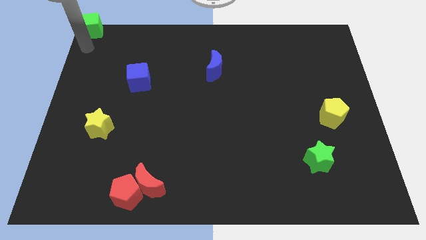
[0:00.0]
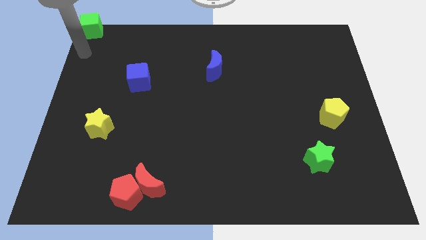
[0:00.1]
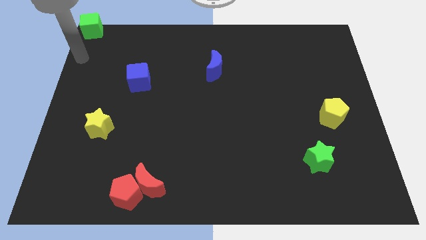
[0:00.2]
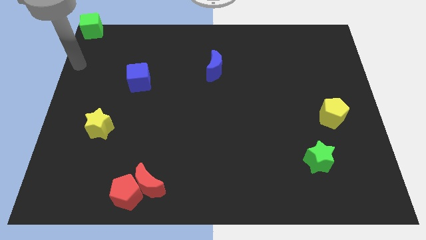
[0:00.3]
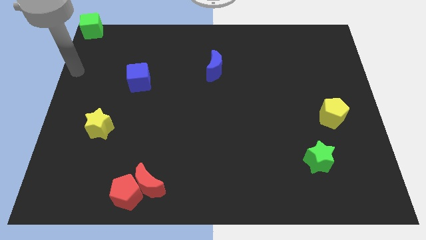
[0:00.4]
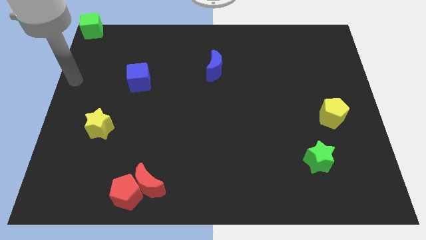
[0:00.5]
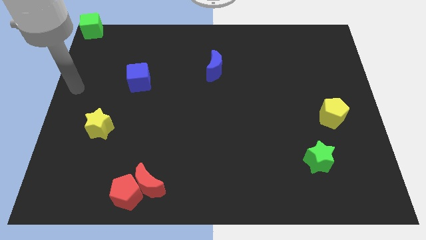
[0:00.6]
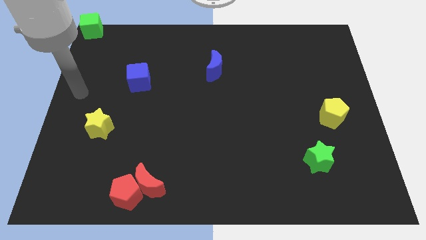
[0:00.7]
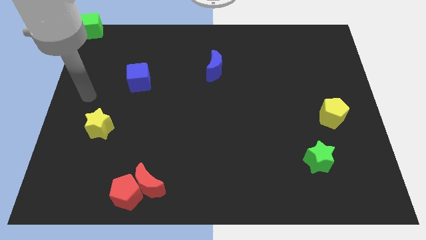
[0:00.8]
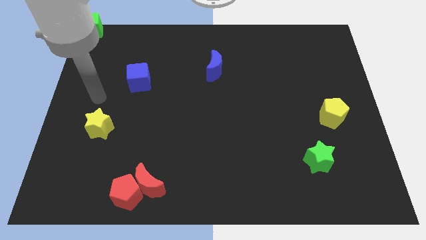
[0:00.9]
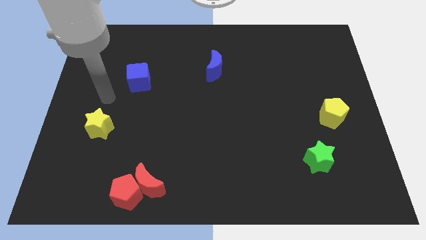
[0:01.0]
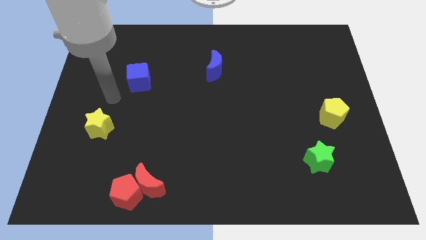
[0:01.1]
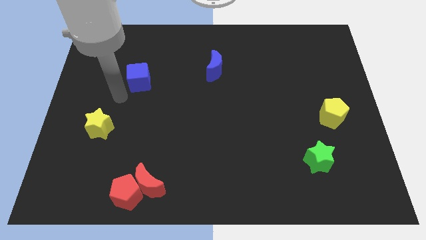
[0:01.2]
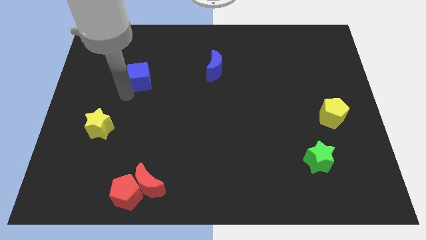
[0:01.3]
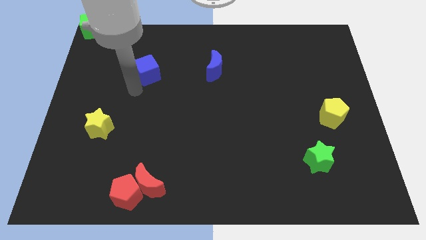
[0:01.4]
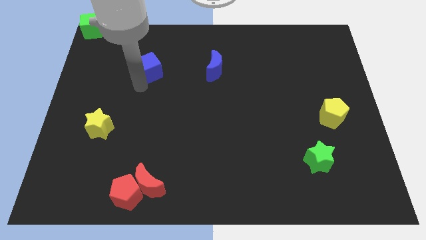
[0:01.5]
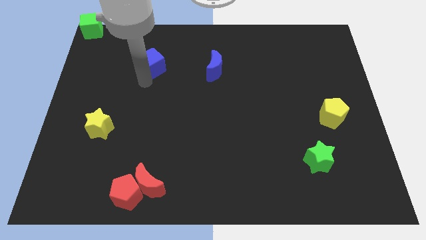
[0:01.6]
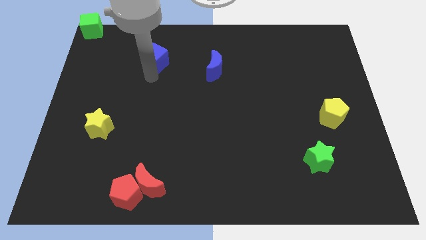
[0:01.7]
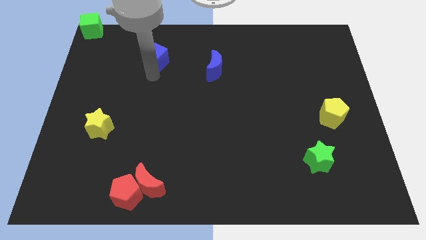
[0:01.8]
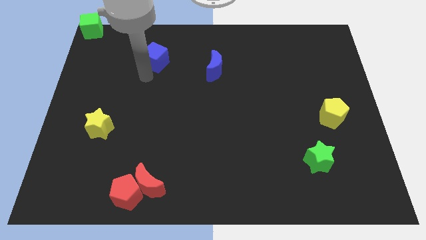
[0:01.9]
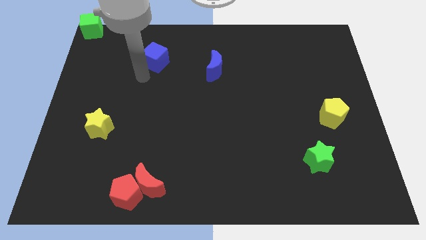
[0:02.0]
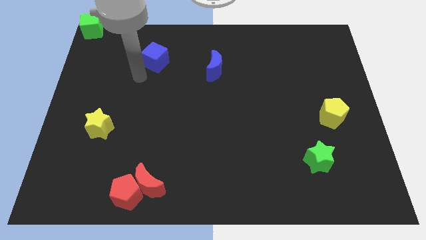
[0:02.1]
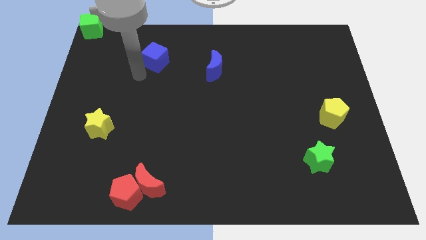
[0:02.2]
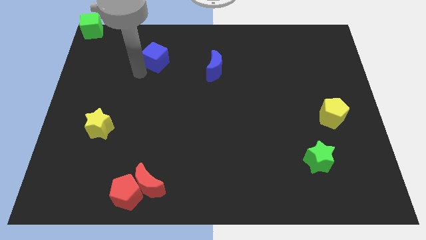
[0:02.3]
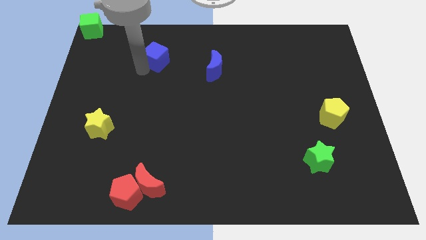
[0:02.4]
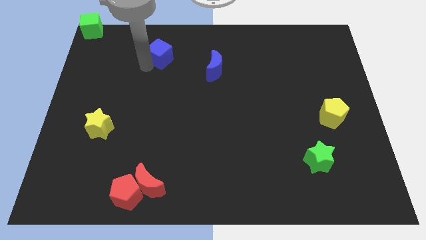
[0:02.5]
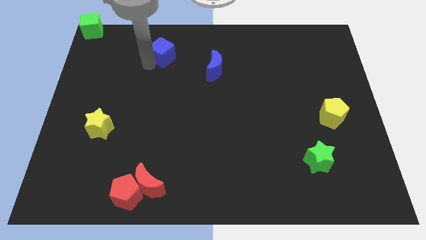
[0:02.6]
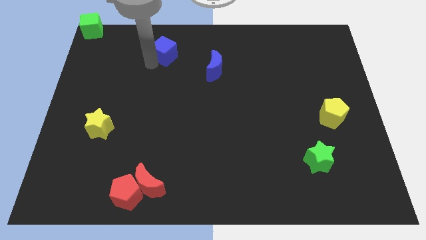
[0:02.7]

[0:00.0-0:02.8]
place blue cube in between green cube and blue moon

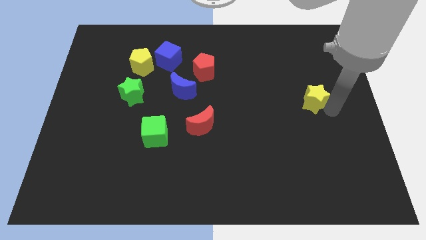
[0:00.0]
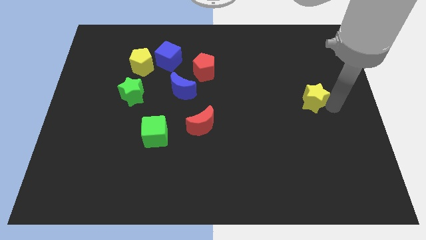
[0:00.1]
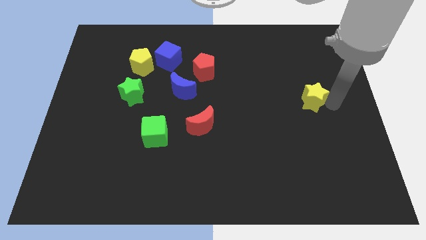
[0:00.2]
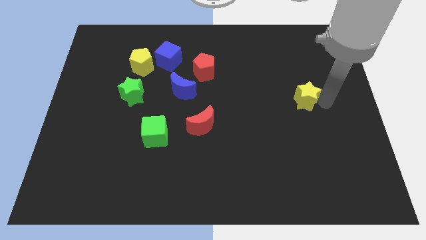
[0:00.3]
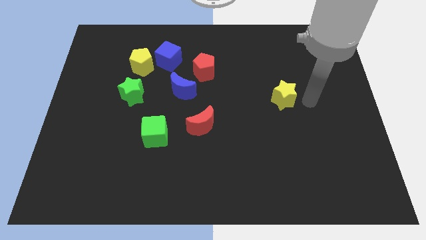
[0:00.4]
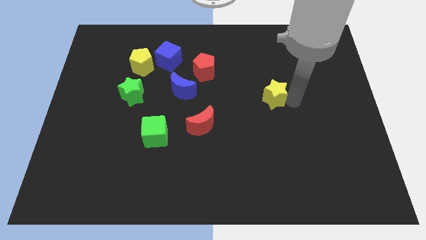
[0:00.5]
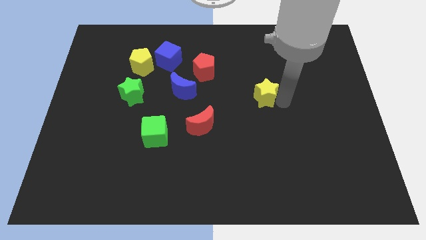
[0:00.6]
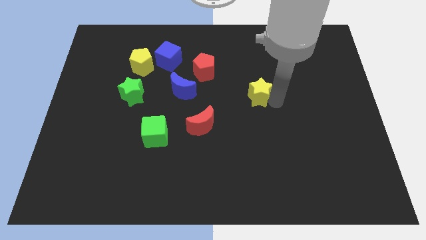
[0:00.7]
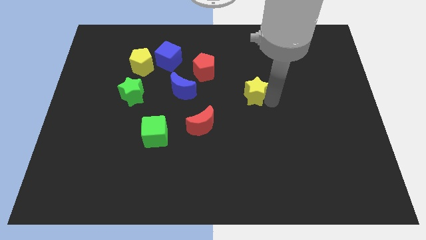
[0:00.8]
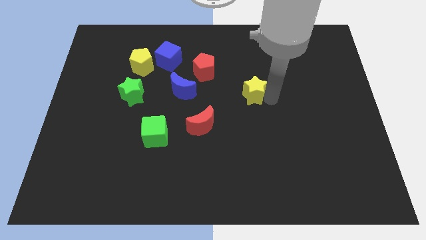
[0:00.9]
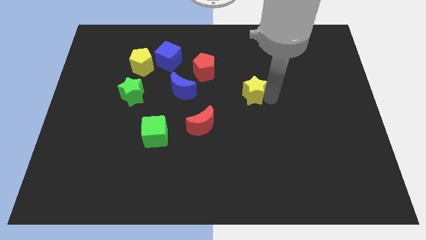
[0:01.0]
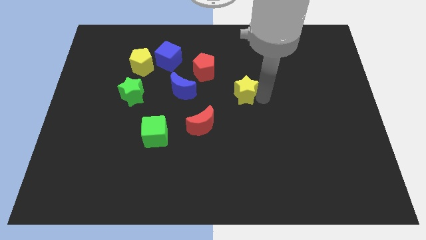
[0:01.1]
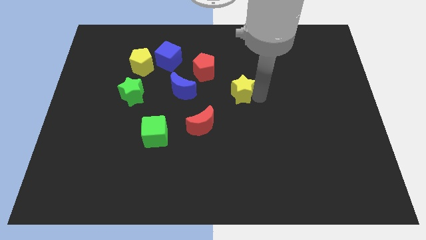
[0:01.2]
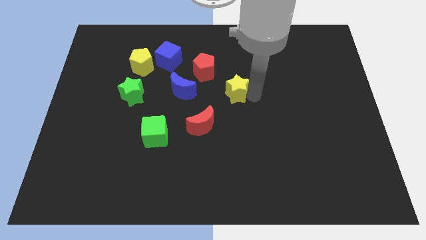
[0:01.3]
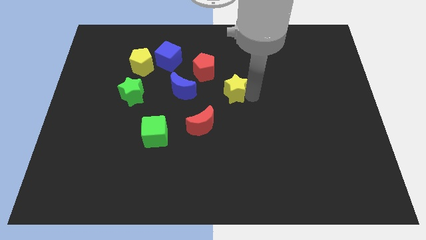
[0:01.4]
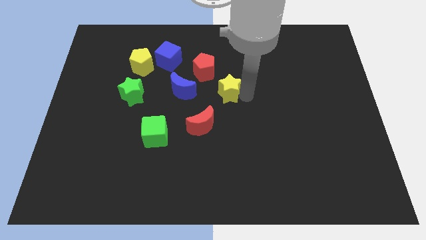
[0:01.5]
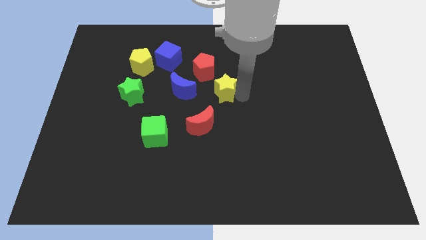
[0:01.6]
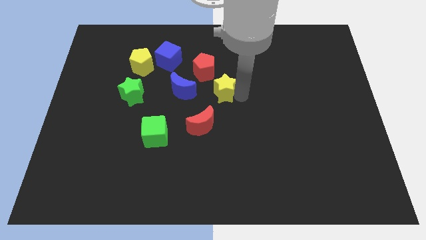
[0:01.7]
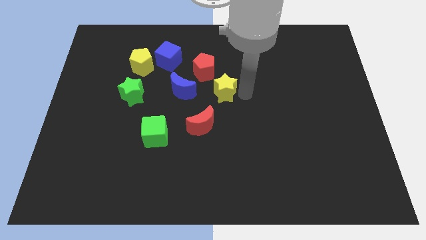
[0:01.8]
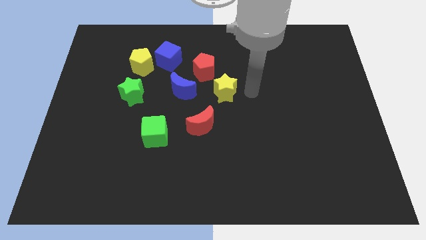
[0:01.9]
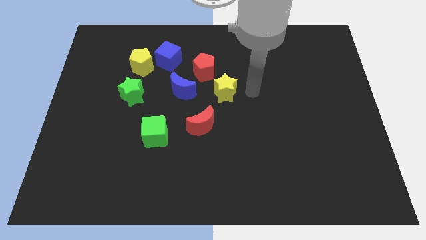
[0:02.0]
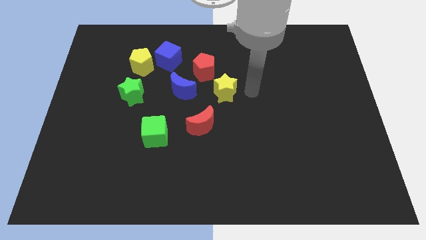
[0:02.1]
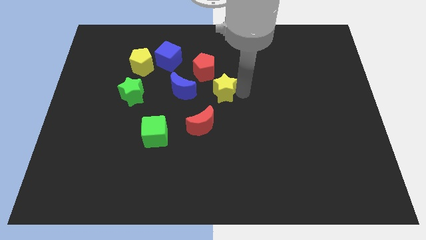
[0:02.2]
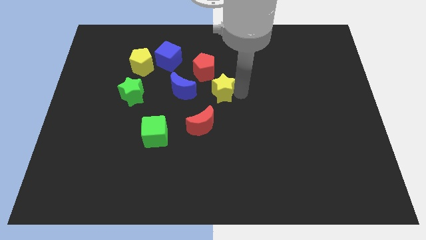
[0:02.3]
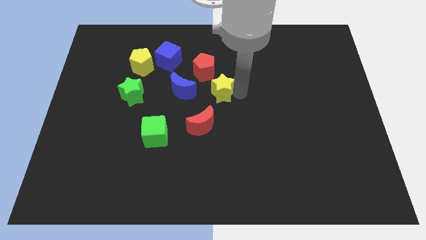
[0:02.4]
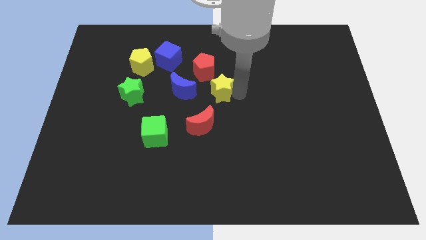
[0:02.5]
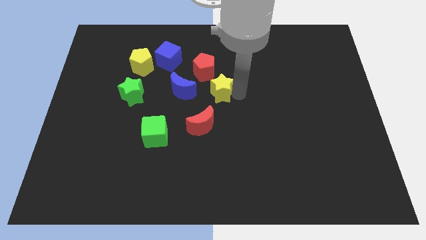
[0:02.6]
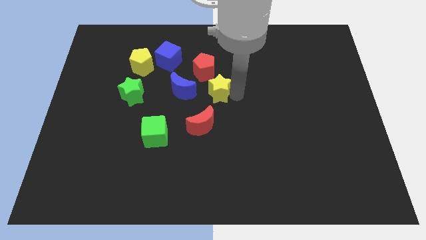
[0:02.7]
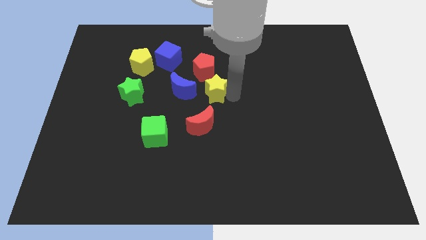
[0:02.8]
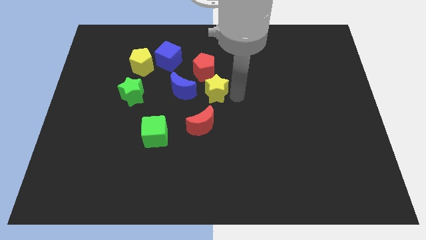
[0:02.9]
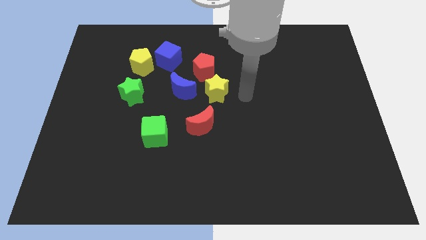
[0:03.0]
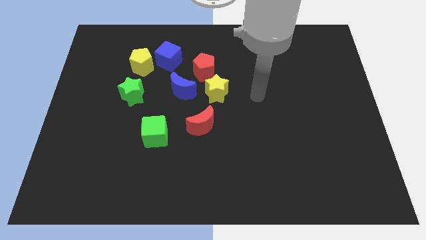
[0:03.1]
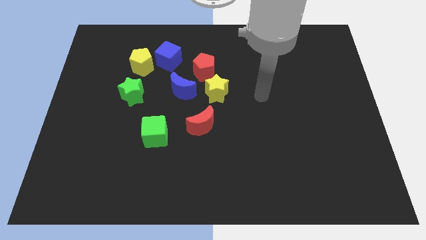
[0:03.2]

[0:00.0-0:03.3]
move the yellow star to the center of the board

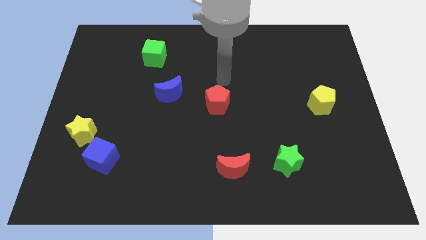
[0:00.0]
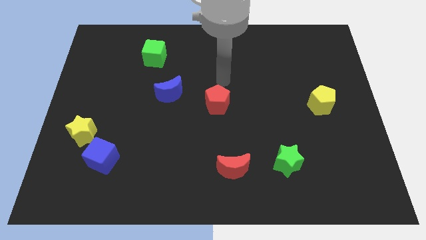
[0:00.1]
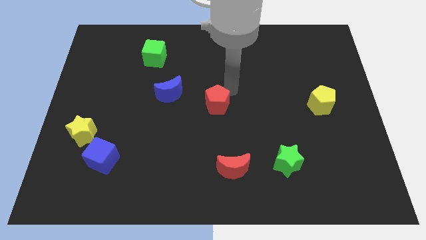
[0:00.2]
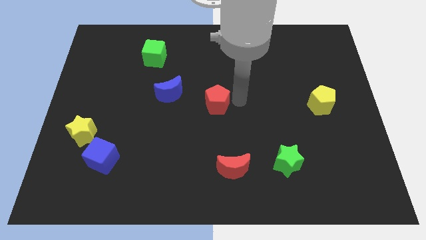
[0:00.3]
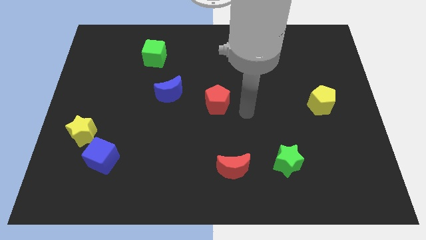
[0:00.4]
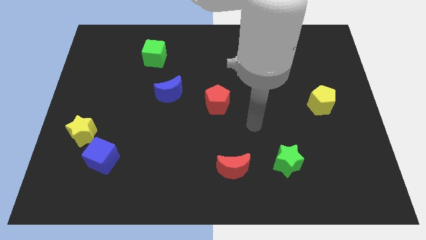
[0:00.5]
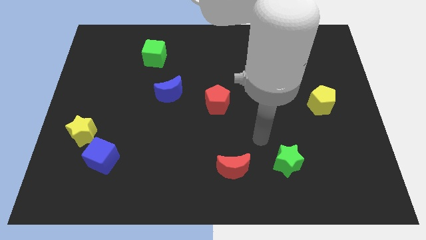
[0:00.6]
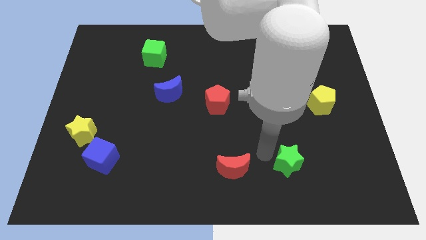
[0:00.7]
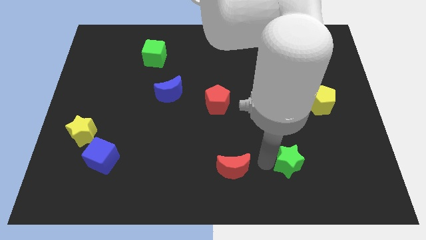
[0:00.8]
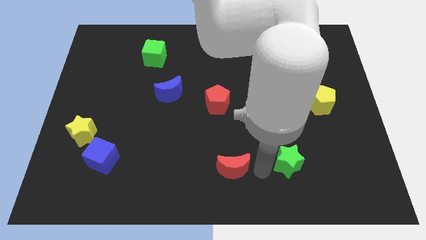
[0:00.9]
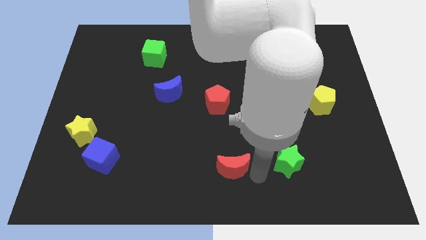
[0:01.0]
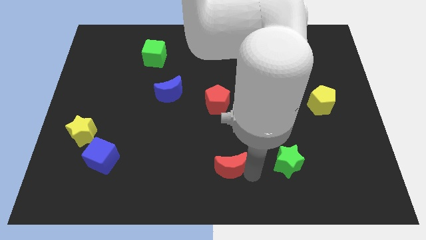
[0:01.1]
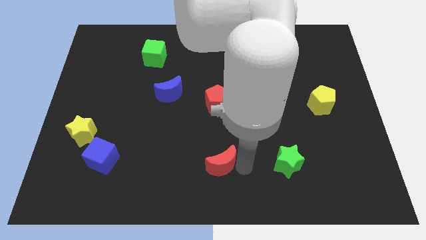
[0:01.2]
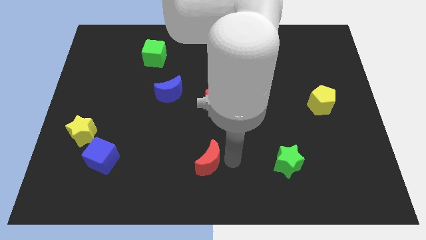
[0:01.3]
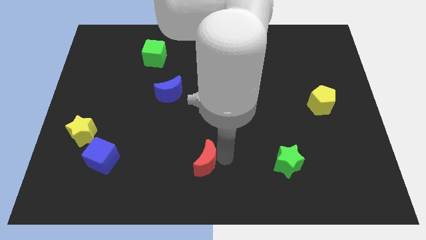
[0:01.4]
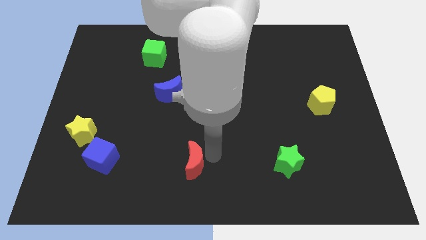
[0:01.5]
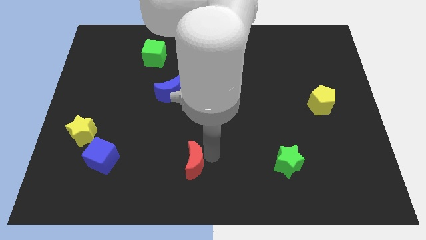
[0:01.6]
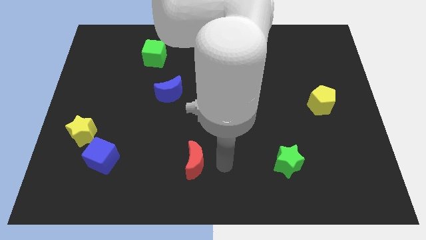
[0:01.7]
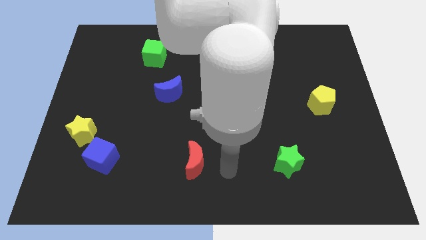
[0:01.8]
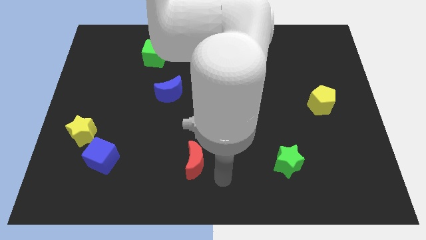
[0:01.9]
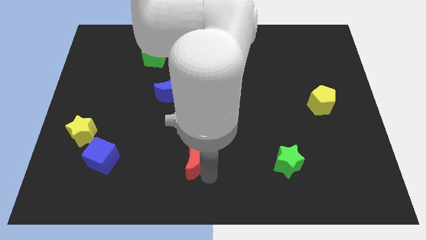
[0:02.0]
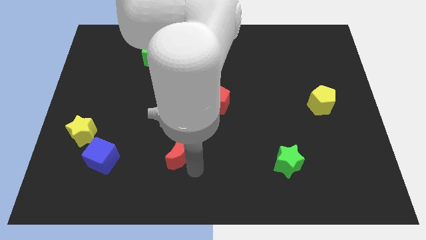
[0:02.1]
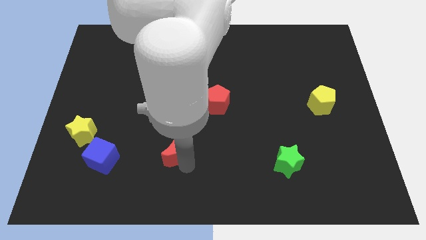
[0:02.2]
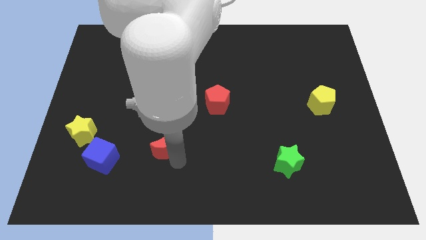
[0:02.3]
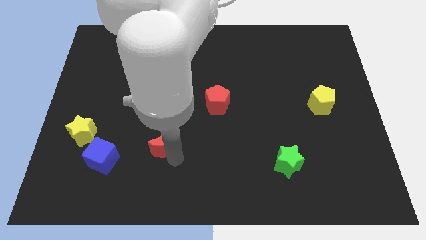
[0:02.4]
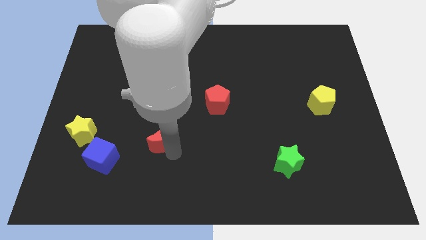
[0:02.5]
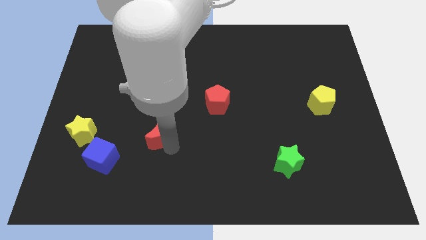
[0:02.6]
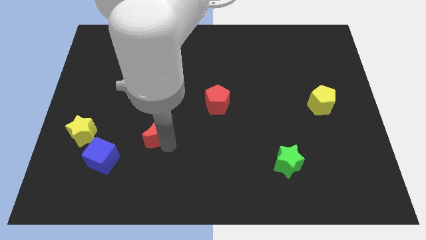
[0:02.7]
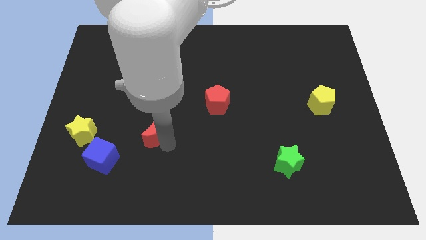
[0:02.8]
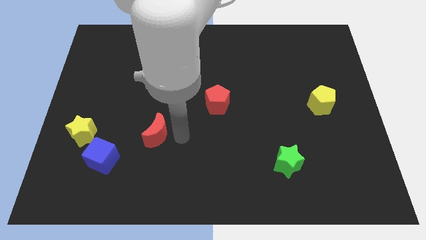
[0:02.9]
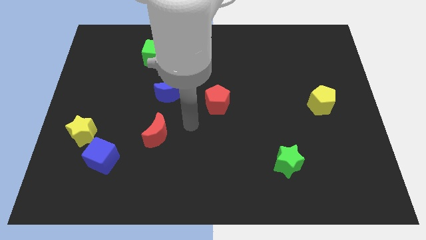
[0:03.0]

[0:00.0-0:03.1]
place the red moon in between the blue cube and the blue moon
